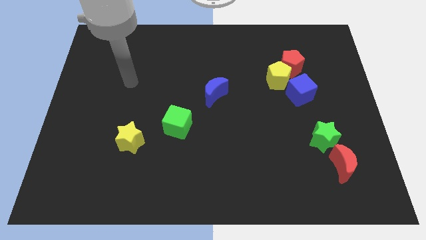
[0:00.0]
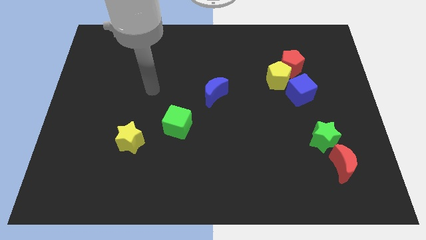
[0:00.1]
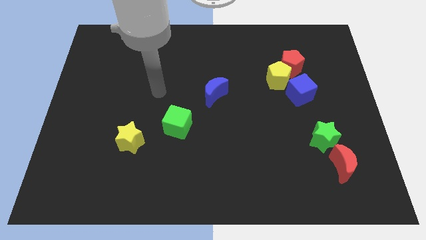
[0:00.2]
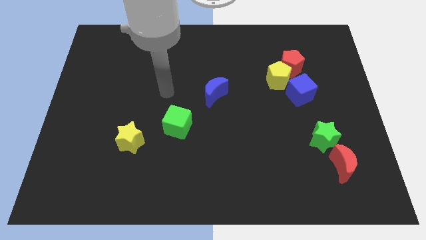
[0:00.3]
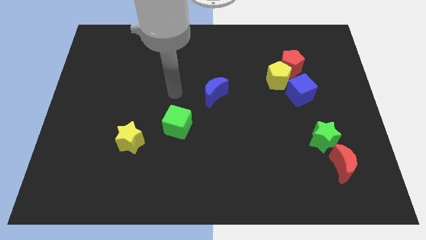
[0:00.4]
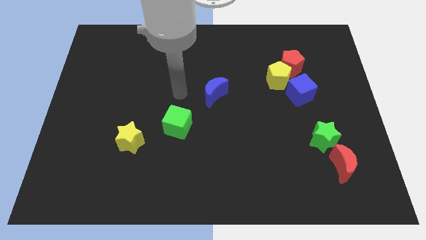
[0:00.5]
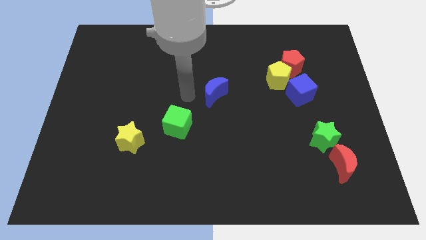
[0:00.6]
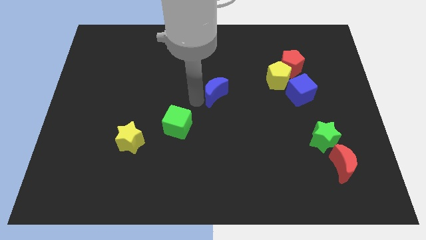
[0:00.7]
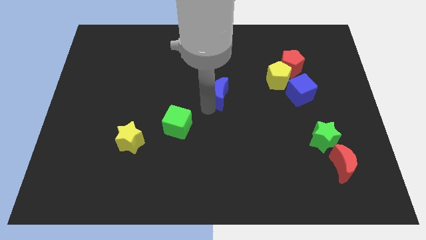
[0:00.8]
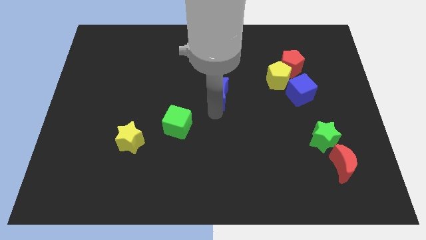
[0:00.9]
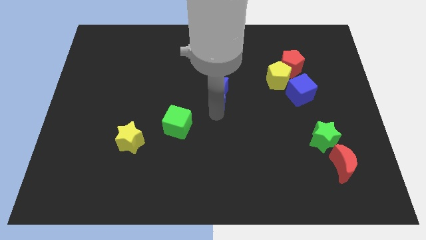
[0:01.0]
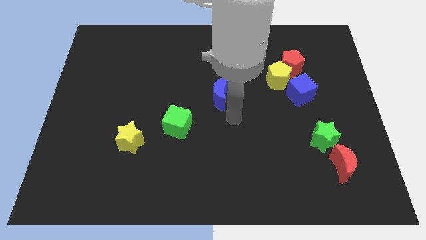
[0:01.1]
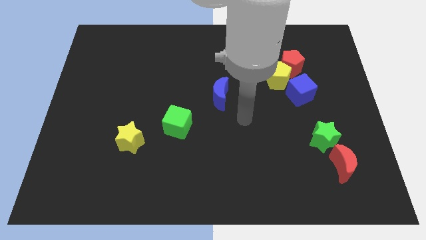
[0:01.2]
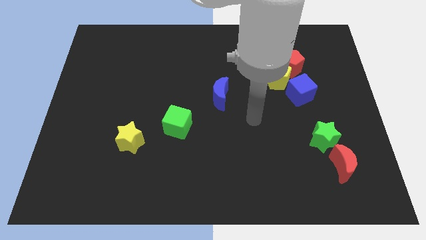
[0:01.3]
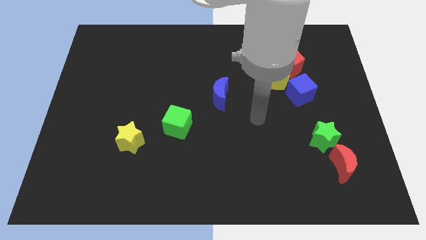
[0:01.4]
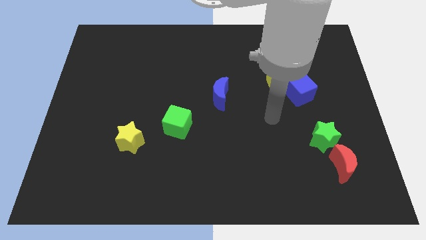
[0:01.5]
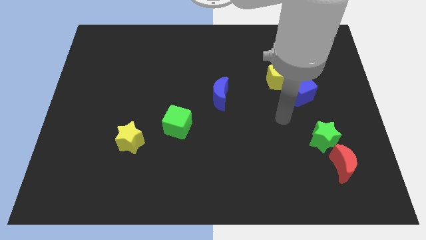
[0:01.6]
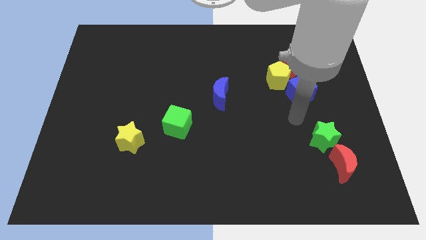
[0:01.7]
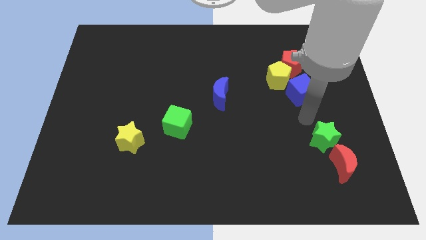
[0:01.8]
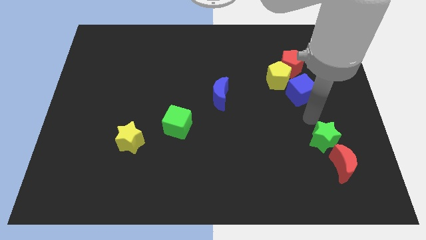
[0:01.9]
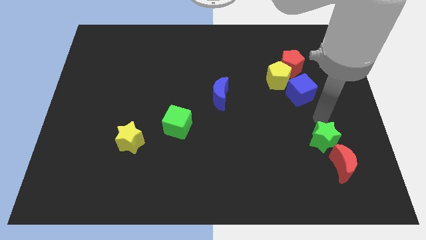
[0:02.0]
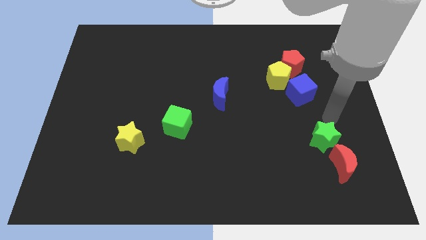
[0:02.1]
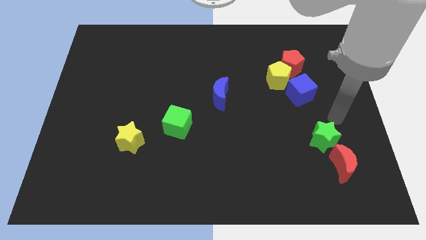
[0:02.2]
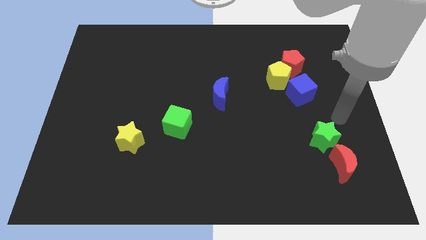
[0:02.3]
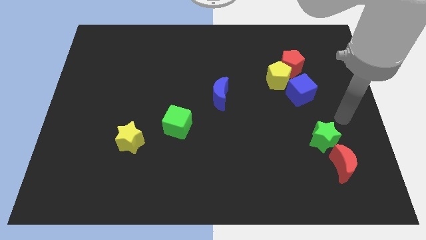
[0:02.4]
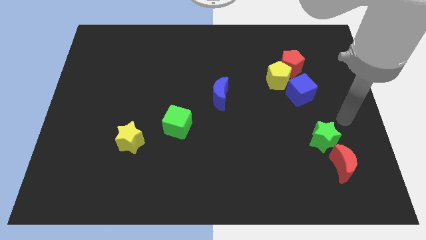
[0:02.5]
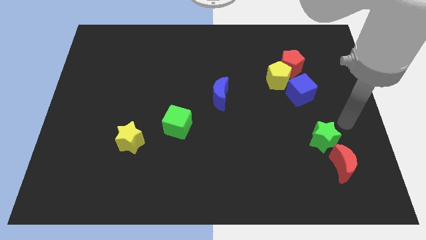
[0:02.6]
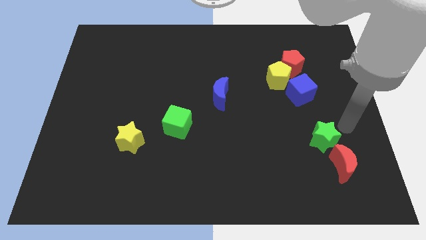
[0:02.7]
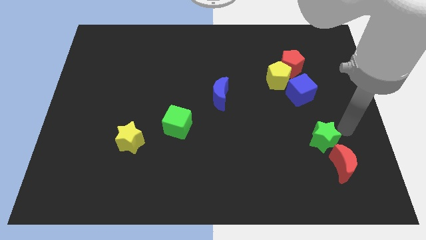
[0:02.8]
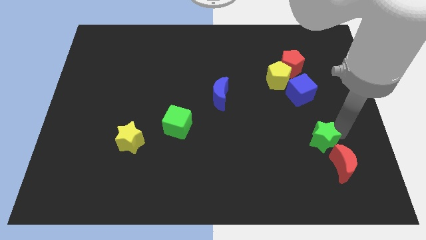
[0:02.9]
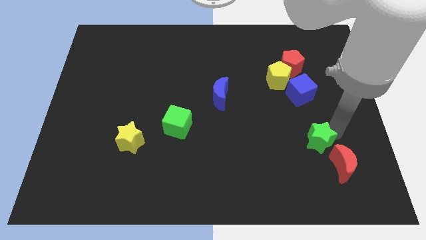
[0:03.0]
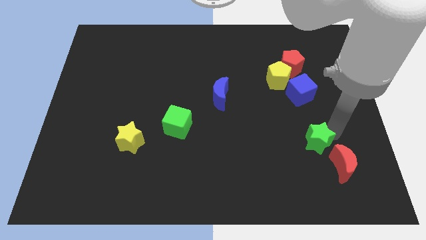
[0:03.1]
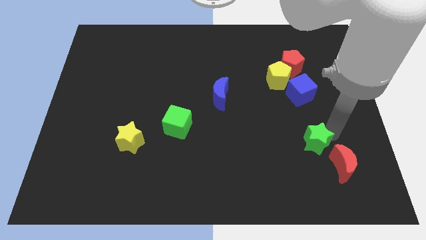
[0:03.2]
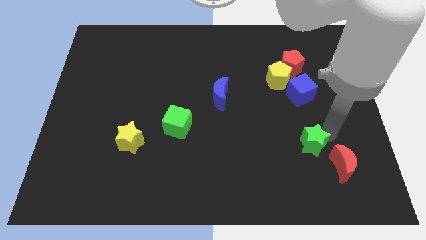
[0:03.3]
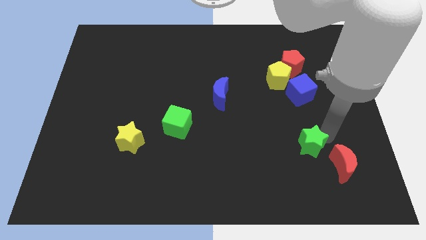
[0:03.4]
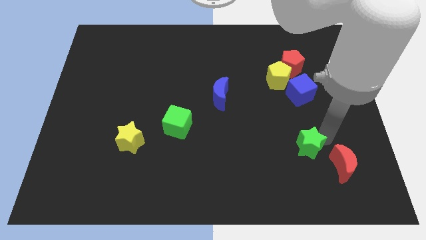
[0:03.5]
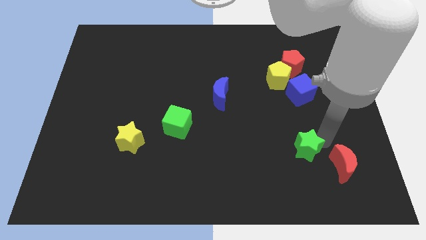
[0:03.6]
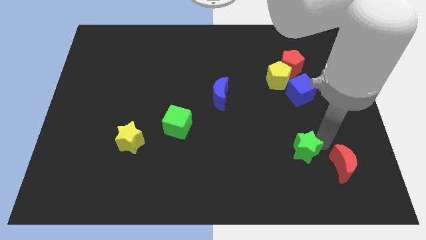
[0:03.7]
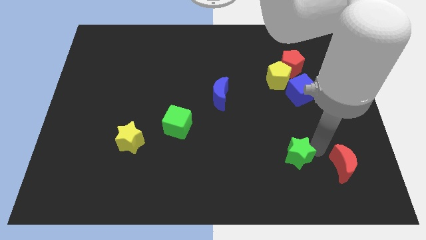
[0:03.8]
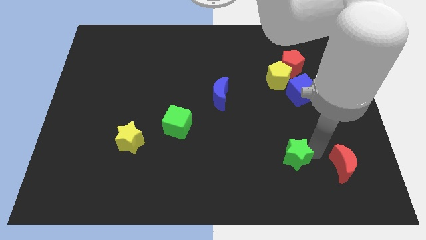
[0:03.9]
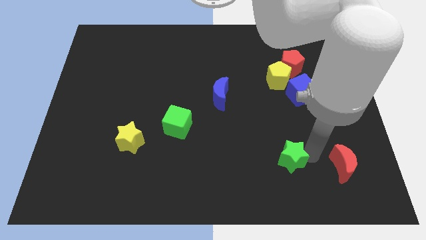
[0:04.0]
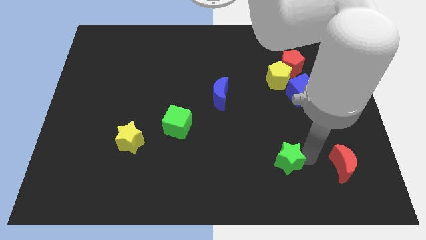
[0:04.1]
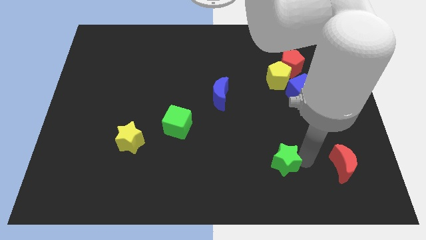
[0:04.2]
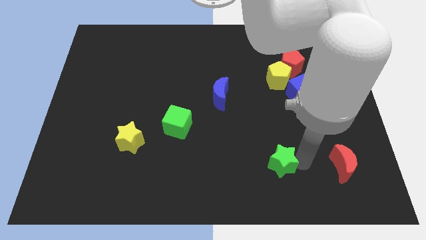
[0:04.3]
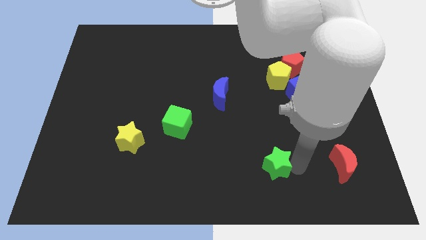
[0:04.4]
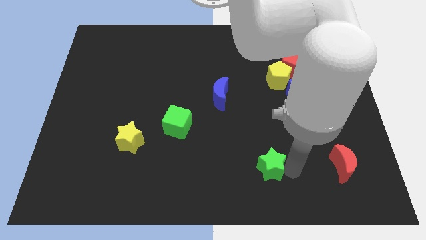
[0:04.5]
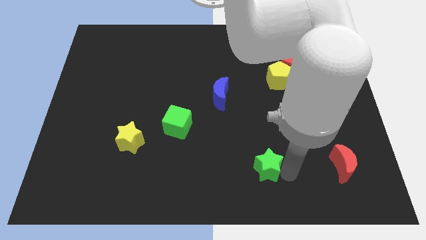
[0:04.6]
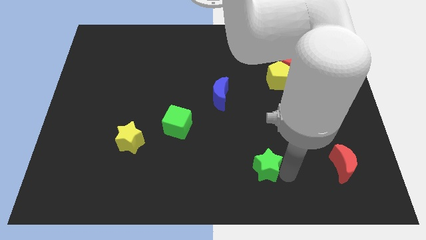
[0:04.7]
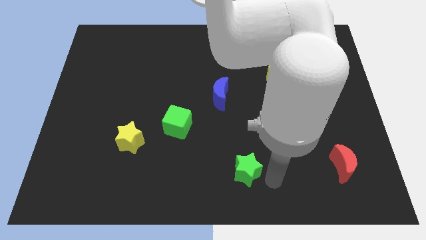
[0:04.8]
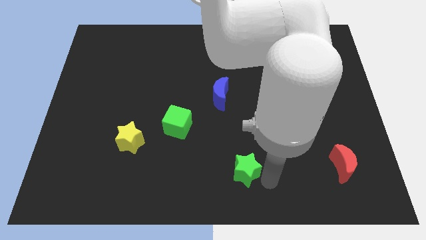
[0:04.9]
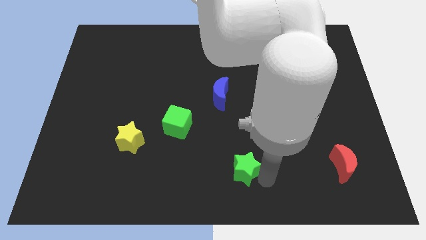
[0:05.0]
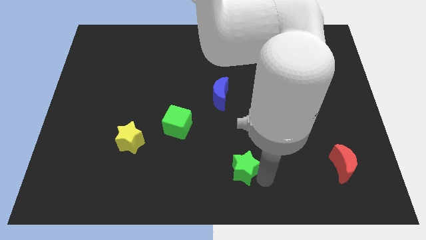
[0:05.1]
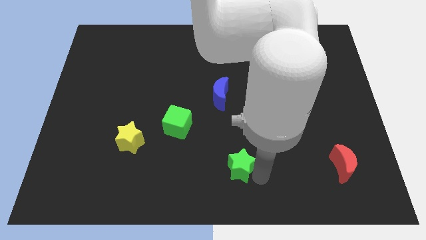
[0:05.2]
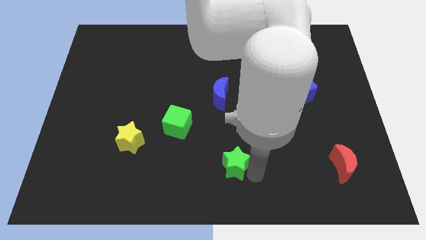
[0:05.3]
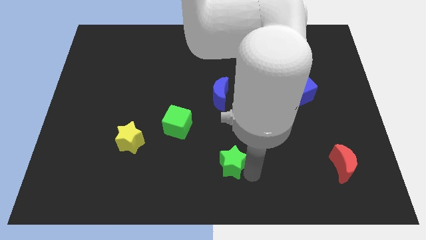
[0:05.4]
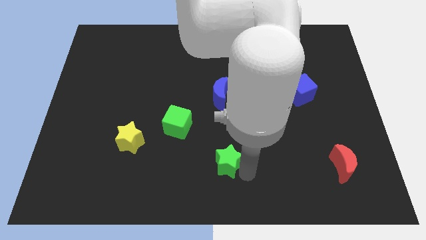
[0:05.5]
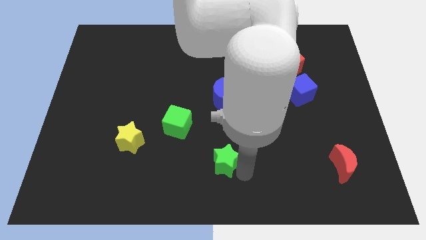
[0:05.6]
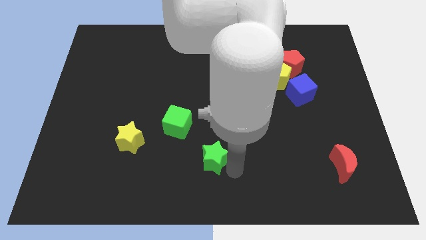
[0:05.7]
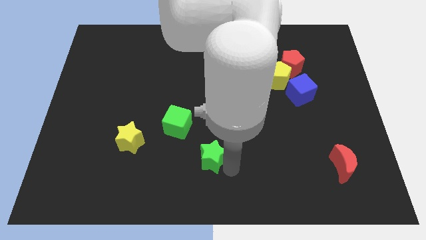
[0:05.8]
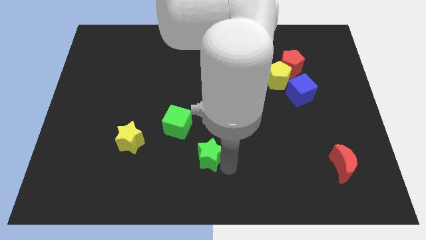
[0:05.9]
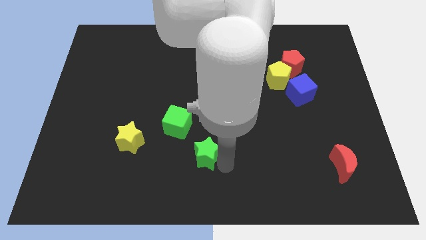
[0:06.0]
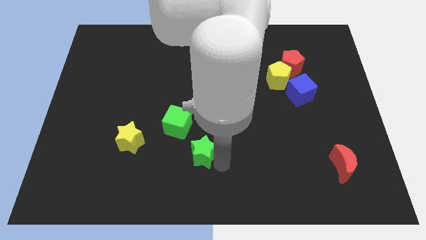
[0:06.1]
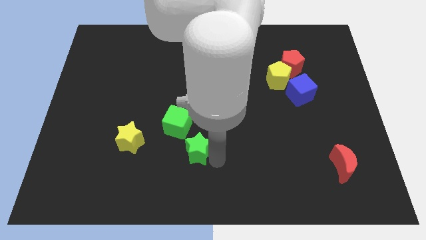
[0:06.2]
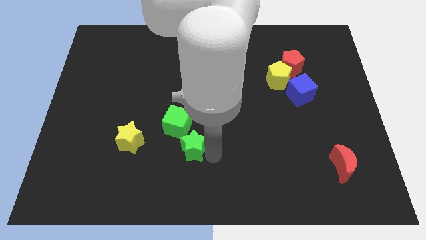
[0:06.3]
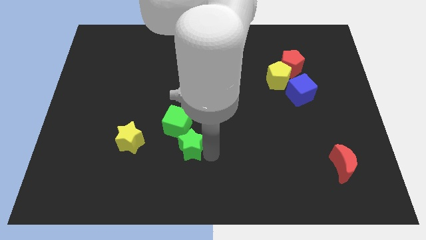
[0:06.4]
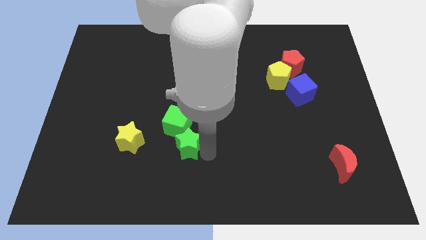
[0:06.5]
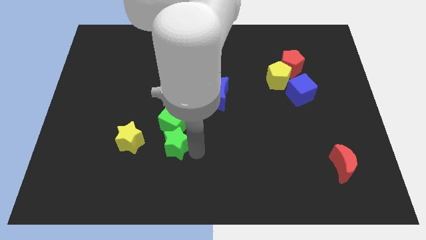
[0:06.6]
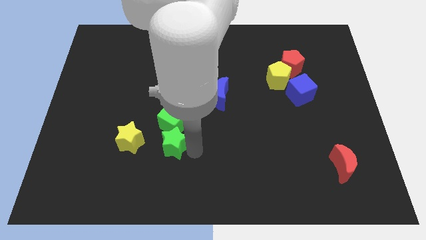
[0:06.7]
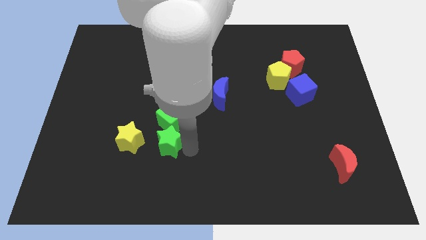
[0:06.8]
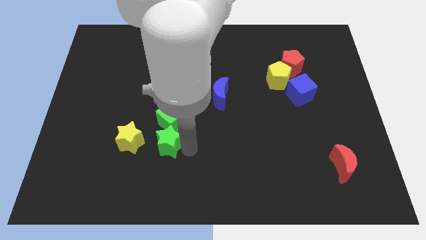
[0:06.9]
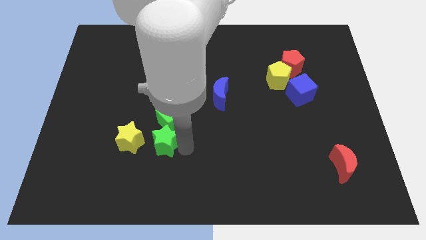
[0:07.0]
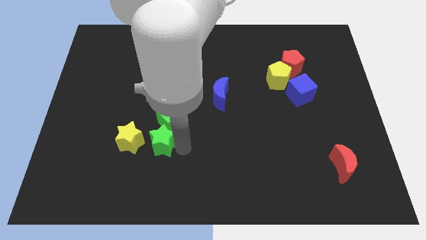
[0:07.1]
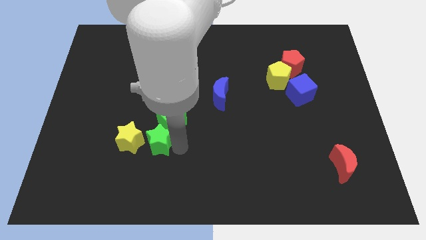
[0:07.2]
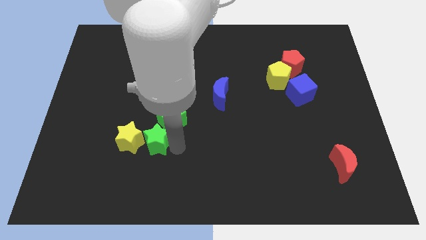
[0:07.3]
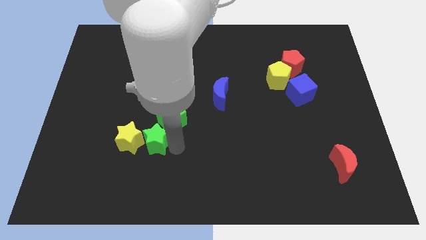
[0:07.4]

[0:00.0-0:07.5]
slide the green star close to the yellow star

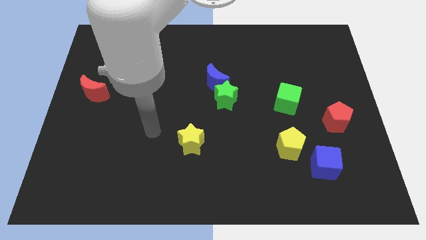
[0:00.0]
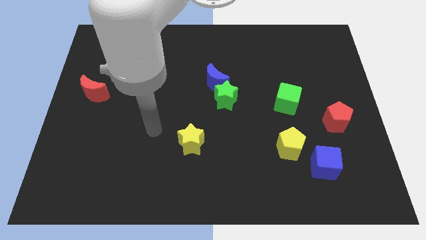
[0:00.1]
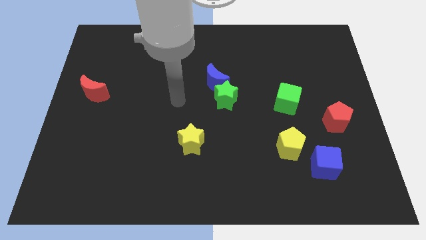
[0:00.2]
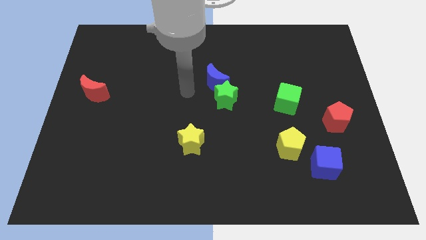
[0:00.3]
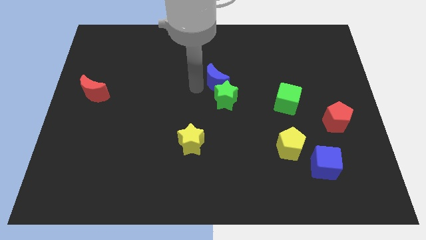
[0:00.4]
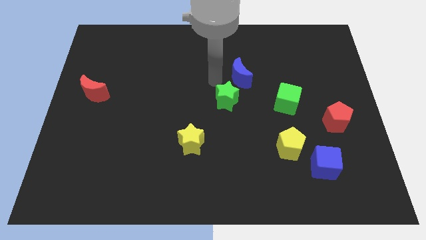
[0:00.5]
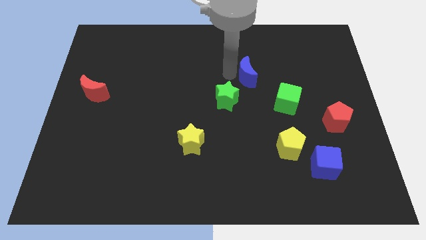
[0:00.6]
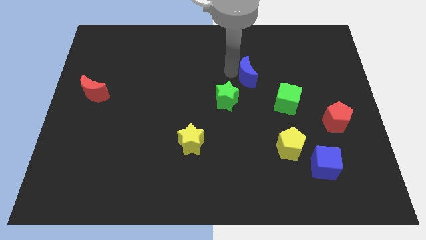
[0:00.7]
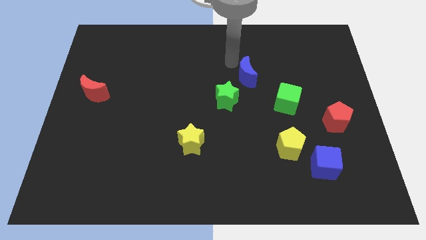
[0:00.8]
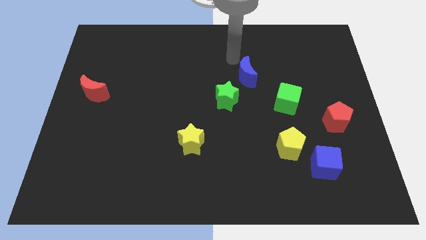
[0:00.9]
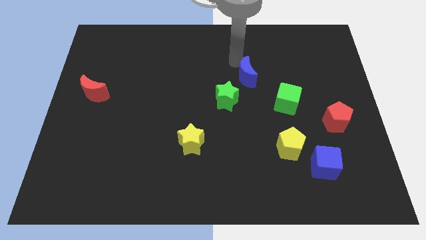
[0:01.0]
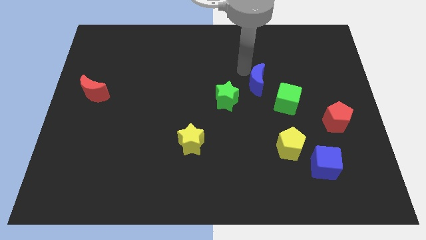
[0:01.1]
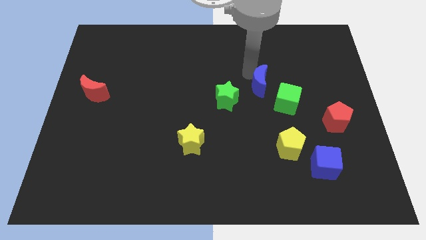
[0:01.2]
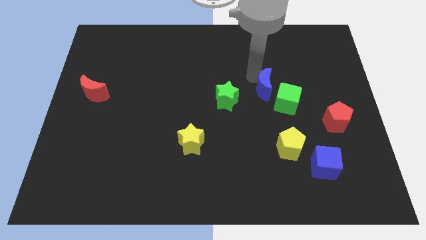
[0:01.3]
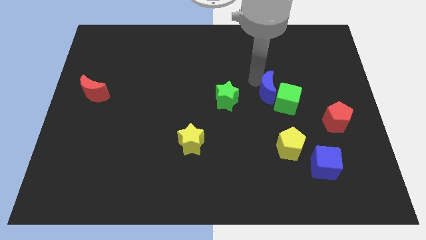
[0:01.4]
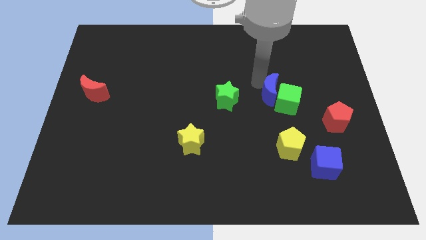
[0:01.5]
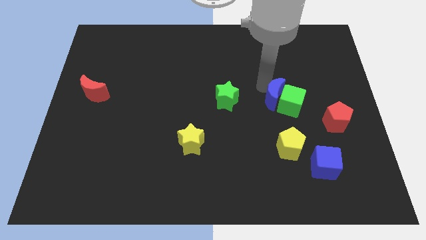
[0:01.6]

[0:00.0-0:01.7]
put the blue moon to the green cube
